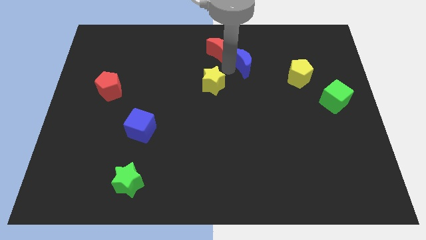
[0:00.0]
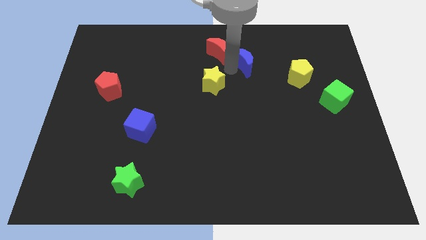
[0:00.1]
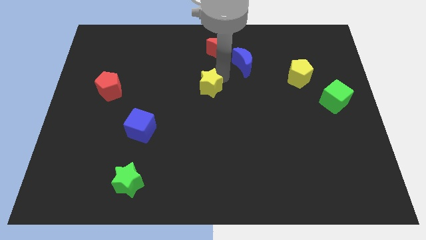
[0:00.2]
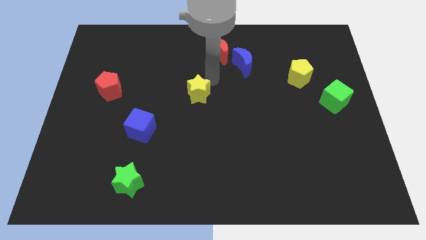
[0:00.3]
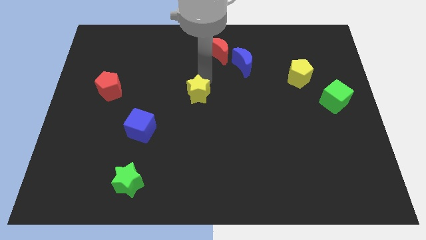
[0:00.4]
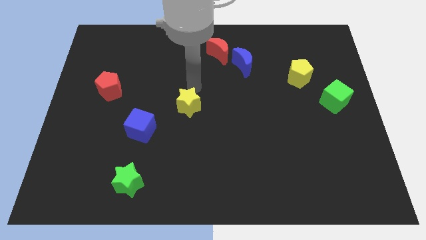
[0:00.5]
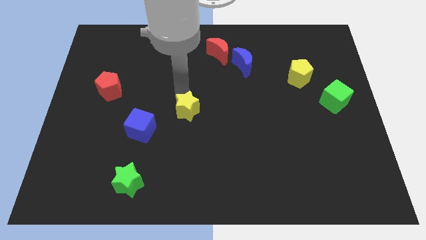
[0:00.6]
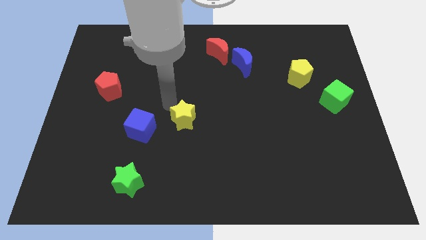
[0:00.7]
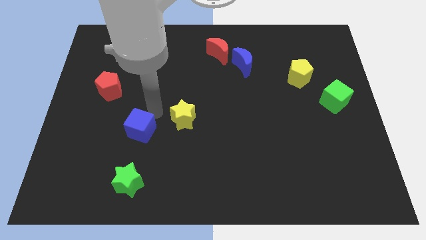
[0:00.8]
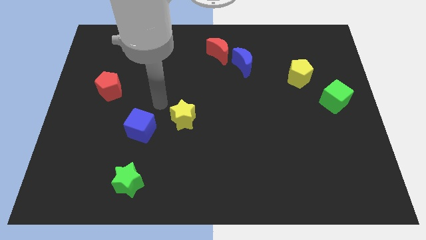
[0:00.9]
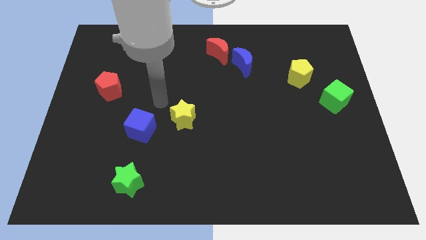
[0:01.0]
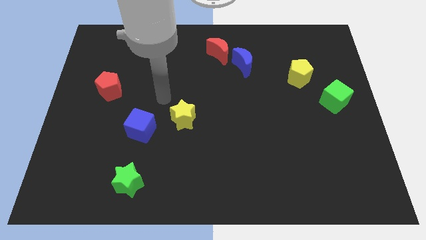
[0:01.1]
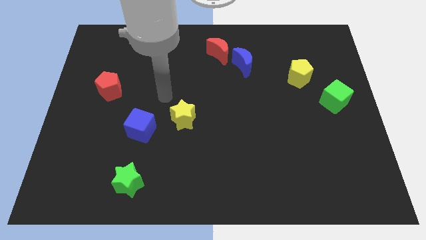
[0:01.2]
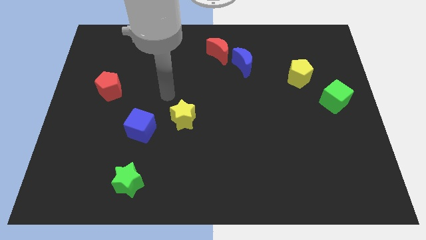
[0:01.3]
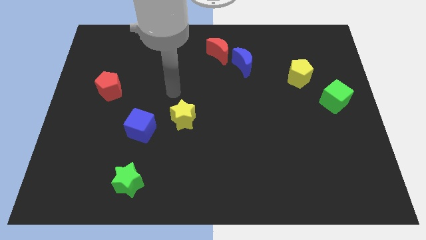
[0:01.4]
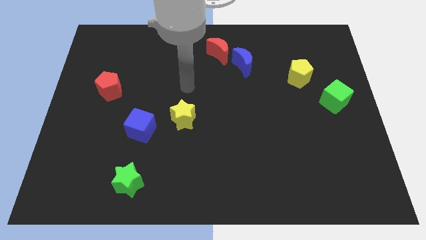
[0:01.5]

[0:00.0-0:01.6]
place yellow star to the right of blue cube

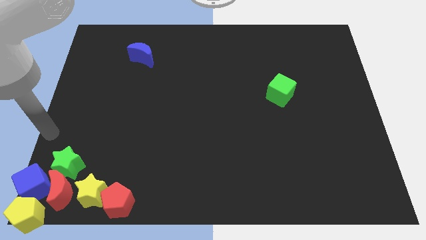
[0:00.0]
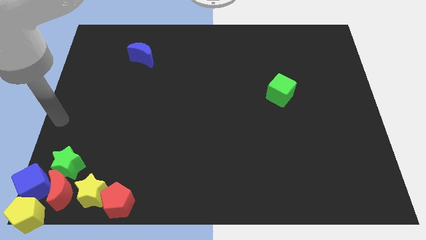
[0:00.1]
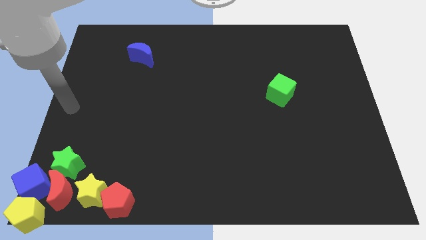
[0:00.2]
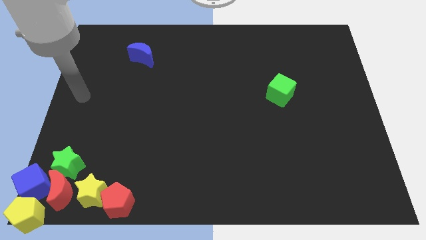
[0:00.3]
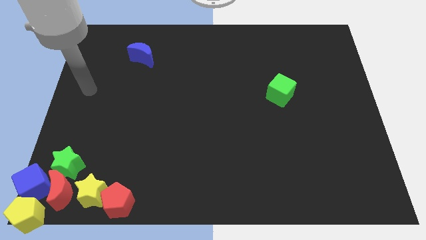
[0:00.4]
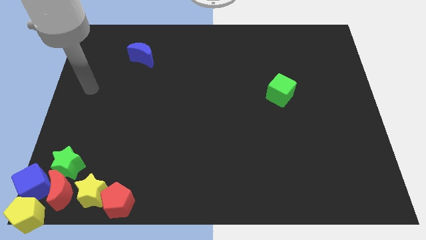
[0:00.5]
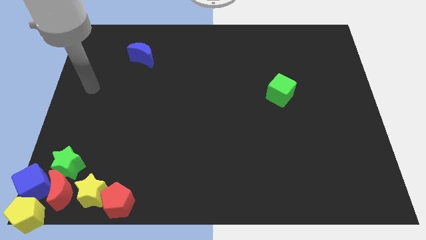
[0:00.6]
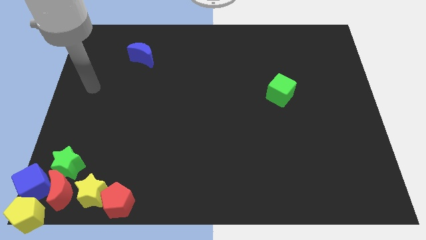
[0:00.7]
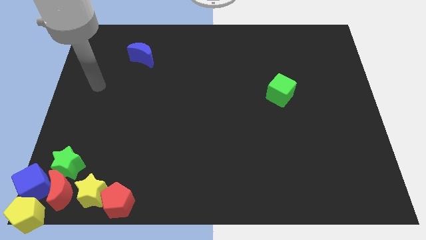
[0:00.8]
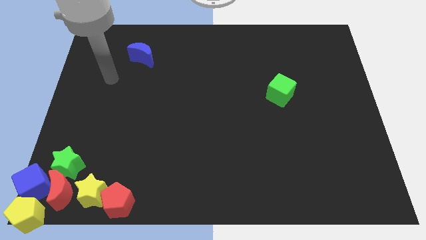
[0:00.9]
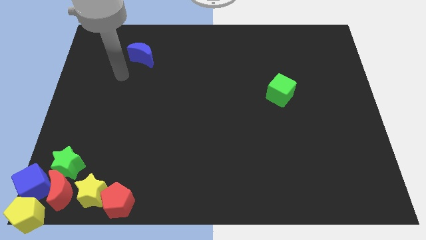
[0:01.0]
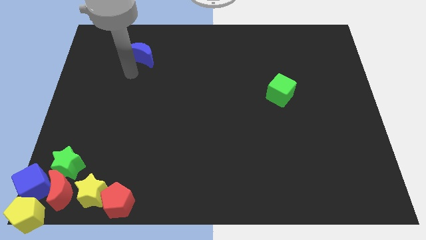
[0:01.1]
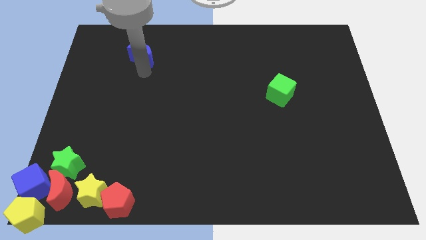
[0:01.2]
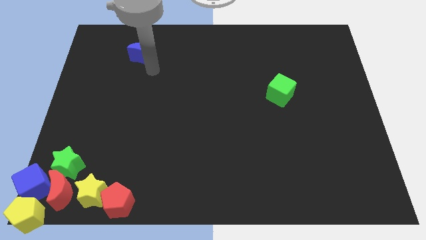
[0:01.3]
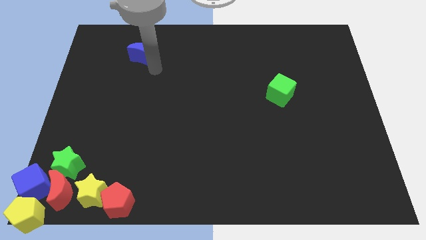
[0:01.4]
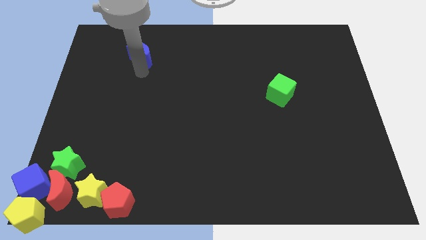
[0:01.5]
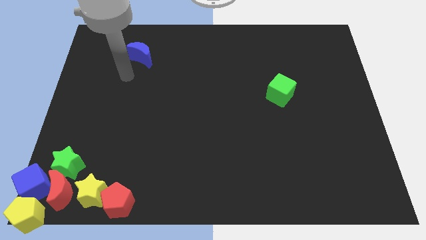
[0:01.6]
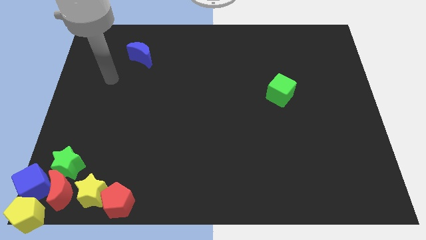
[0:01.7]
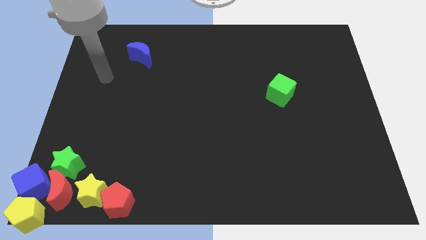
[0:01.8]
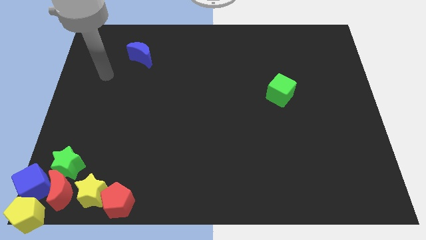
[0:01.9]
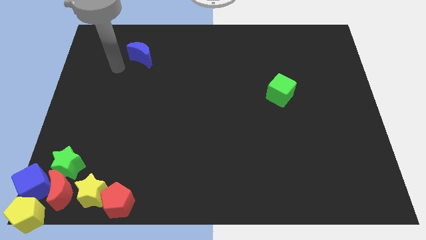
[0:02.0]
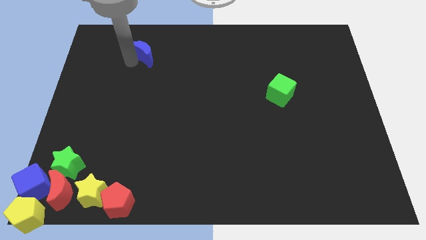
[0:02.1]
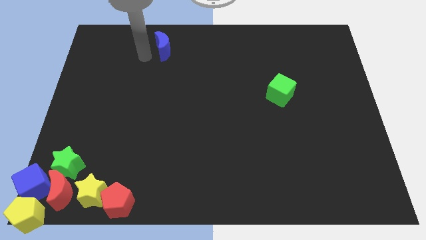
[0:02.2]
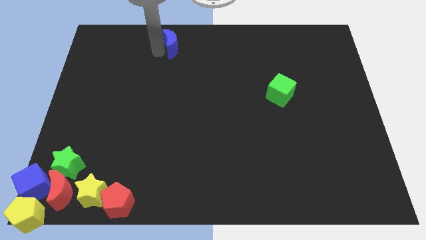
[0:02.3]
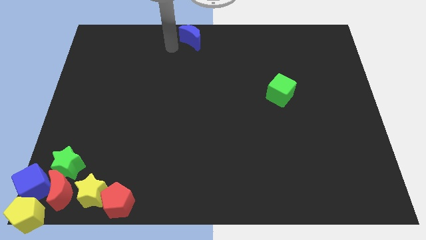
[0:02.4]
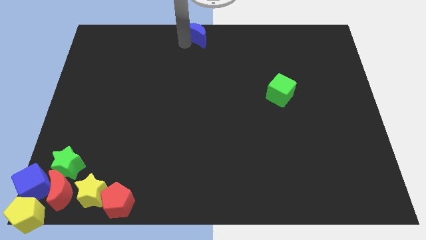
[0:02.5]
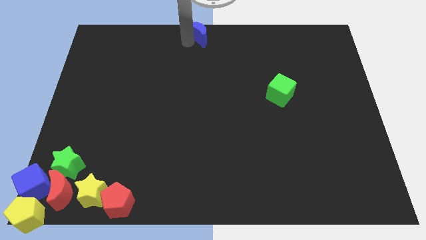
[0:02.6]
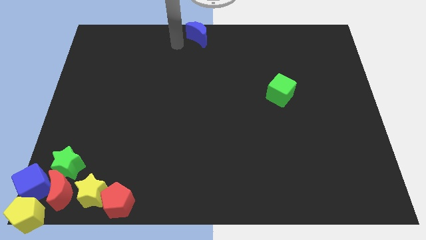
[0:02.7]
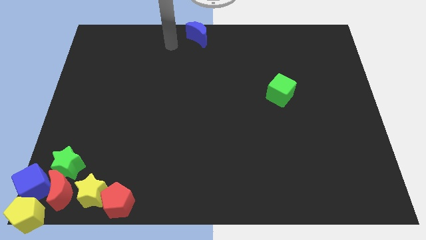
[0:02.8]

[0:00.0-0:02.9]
push blue moon at the top center

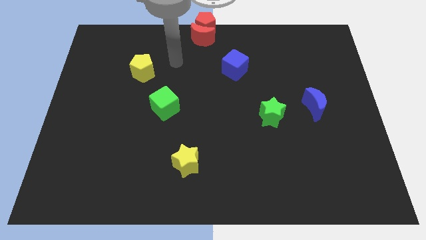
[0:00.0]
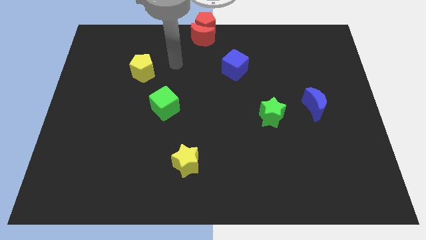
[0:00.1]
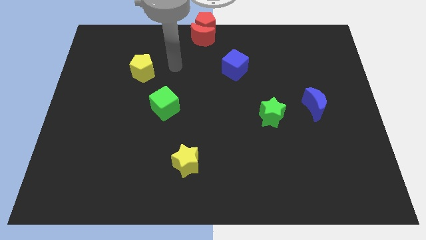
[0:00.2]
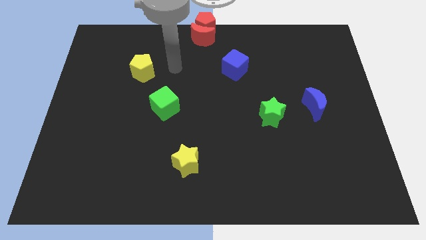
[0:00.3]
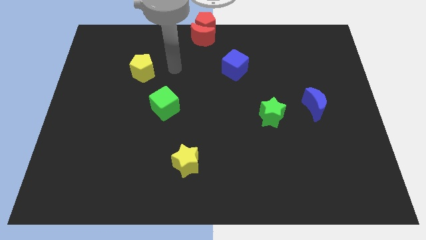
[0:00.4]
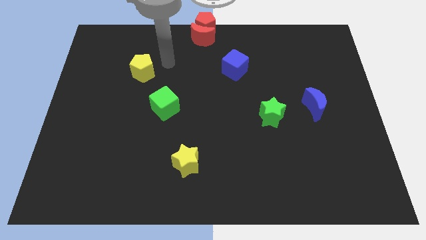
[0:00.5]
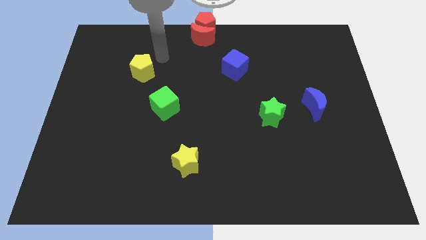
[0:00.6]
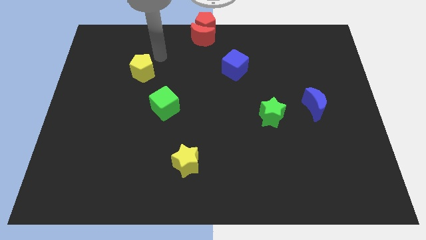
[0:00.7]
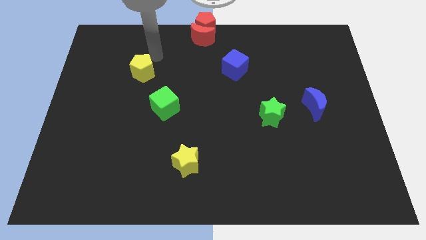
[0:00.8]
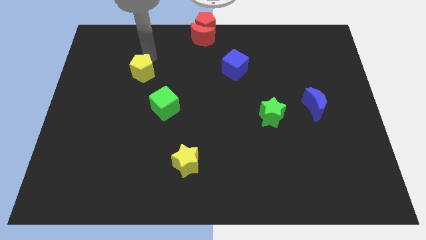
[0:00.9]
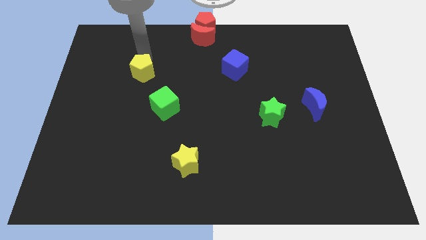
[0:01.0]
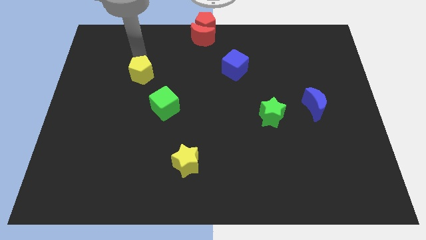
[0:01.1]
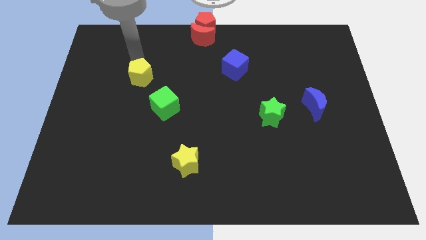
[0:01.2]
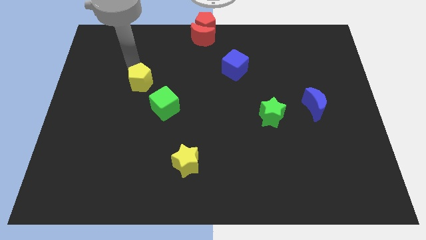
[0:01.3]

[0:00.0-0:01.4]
push yellow pentagon diagonal to the green cube

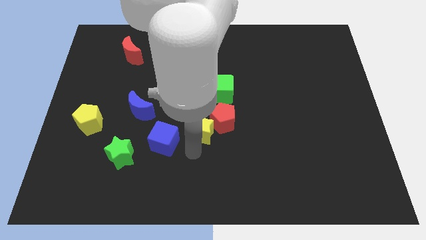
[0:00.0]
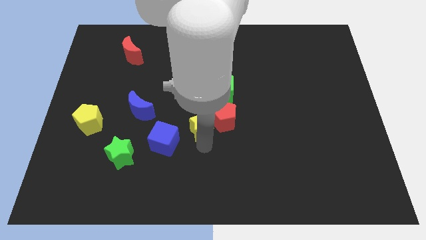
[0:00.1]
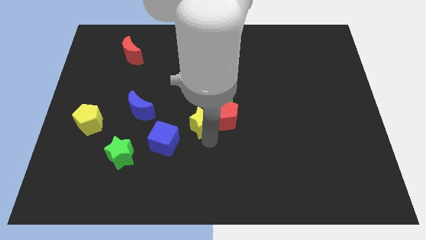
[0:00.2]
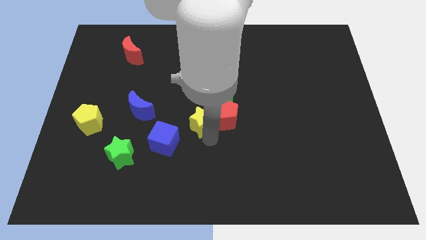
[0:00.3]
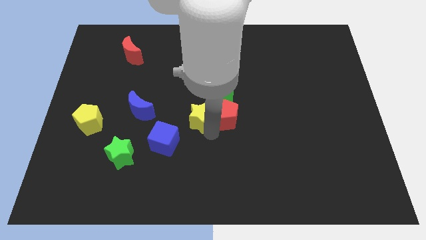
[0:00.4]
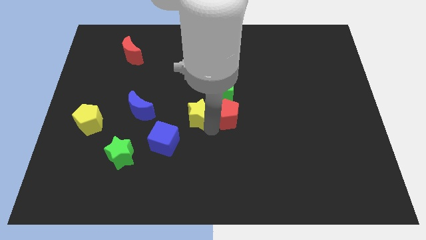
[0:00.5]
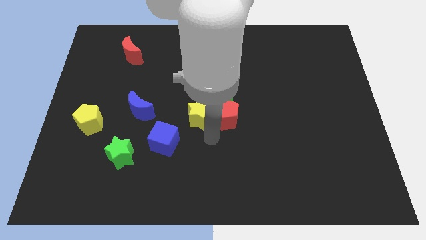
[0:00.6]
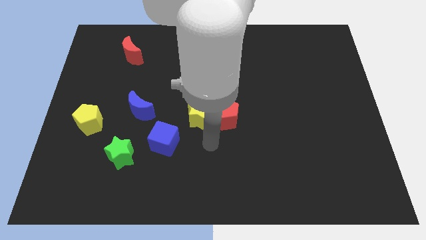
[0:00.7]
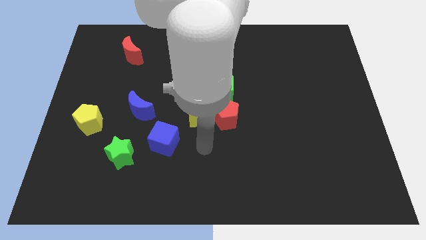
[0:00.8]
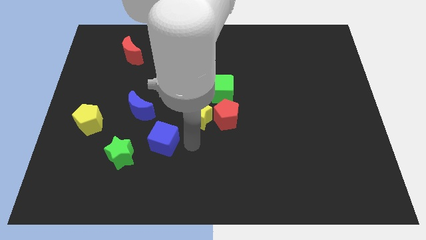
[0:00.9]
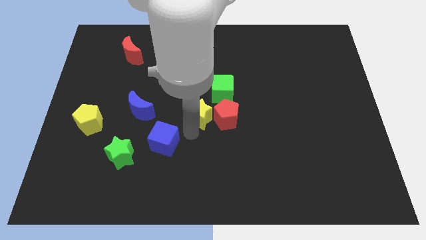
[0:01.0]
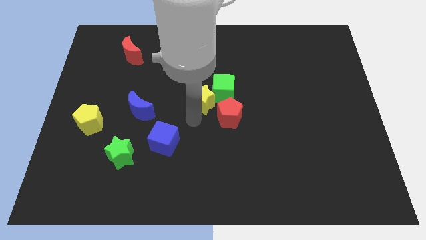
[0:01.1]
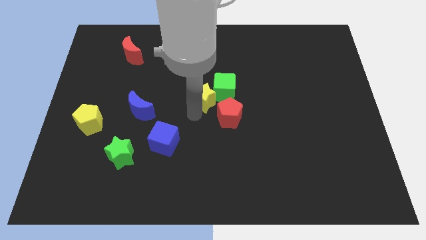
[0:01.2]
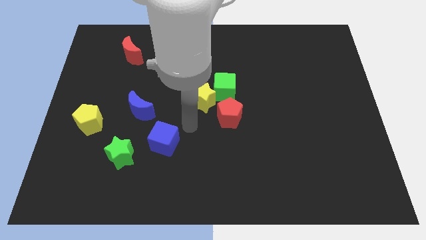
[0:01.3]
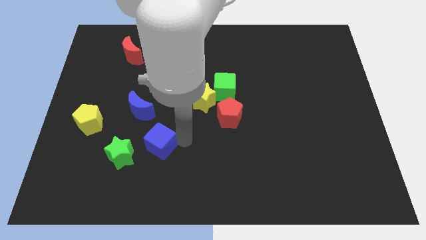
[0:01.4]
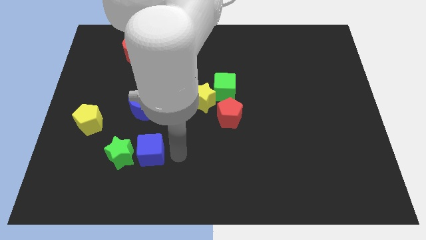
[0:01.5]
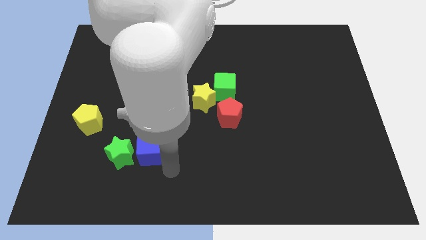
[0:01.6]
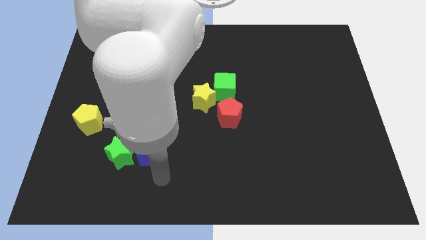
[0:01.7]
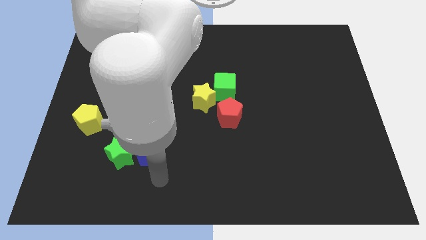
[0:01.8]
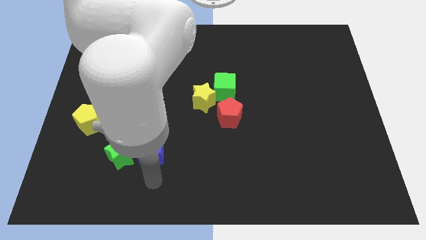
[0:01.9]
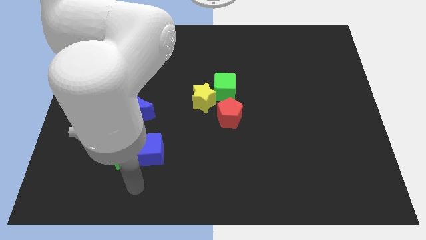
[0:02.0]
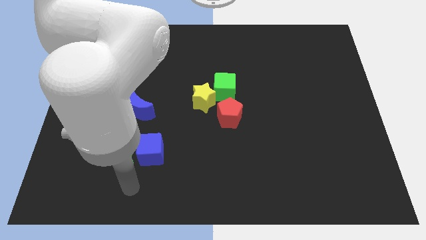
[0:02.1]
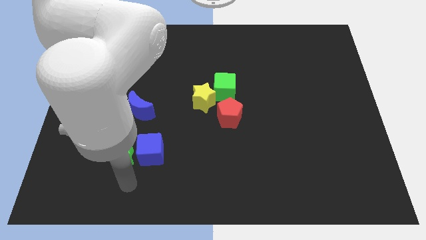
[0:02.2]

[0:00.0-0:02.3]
move the yellow star into the green

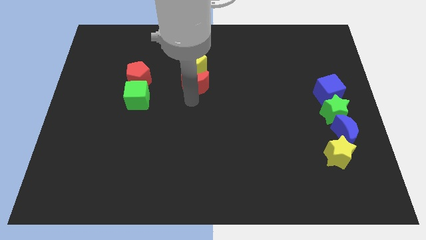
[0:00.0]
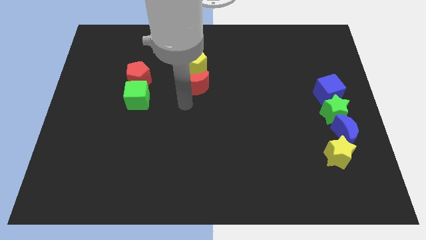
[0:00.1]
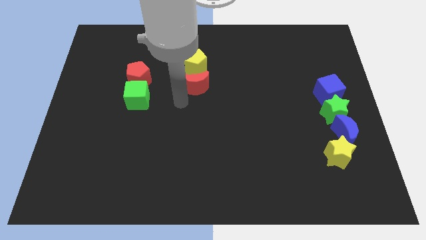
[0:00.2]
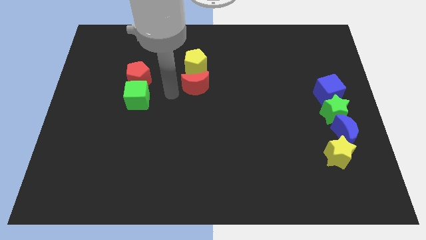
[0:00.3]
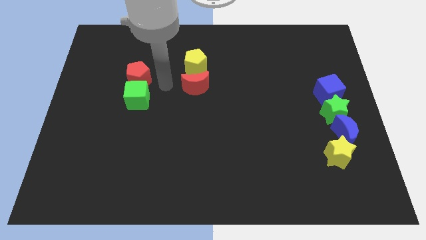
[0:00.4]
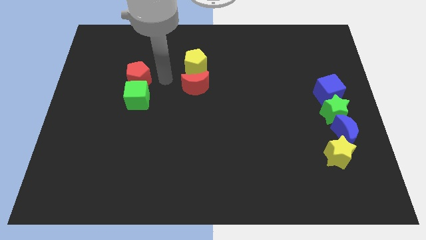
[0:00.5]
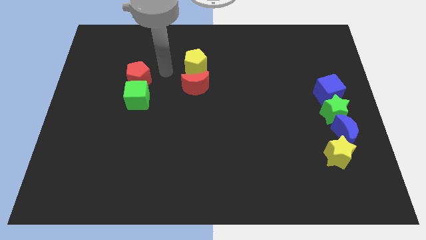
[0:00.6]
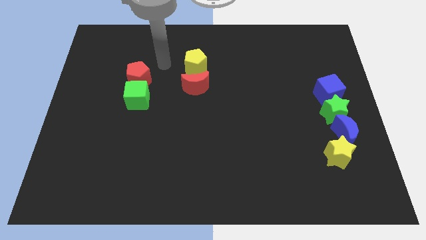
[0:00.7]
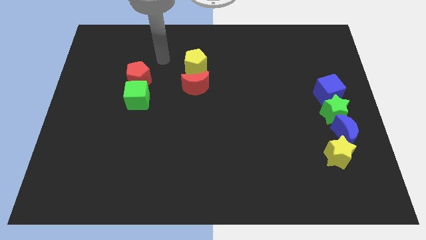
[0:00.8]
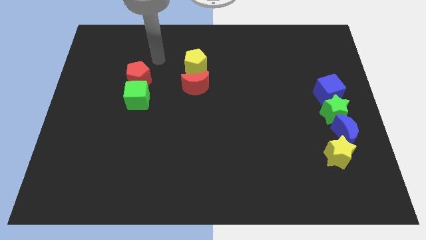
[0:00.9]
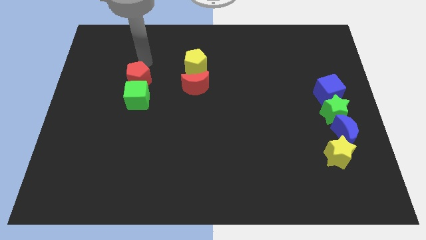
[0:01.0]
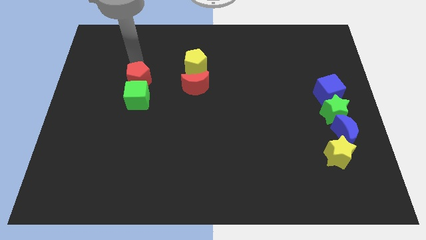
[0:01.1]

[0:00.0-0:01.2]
move arm near red pentagon
